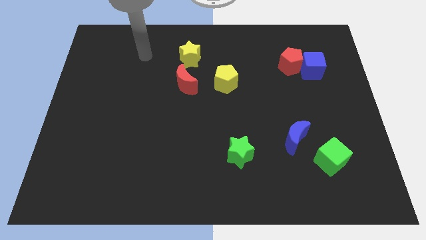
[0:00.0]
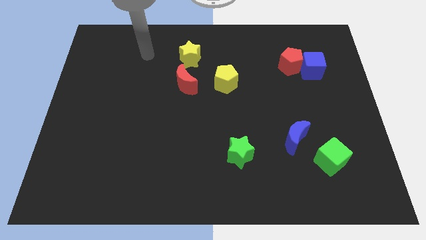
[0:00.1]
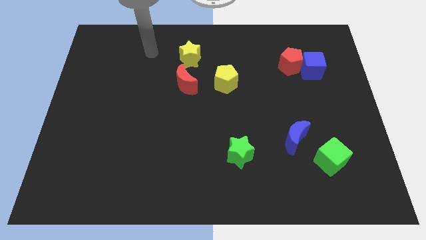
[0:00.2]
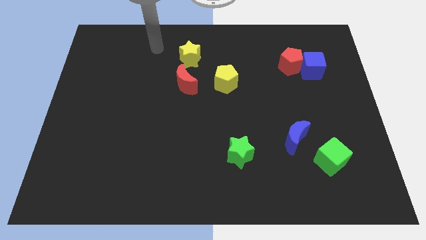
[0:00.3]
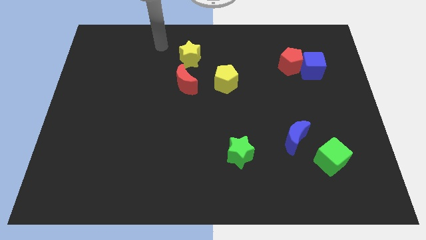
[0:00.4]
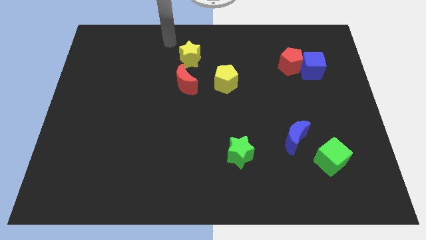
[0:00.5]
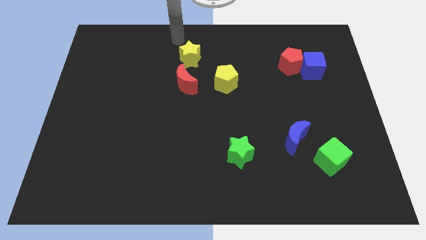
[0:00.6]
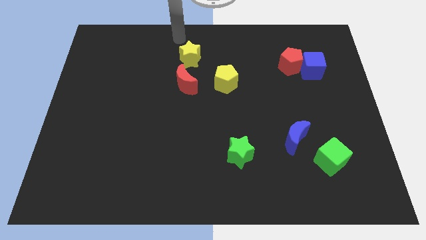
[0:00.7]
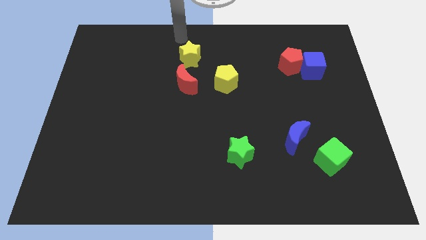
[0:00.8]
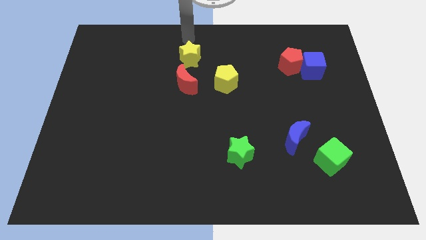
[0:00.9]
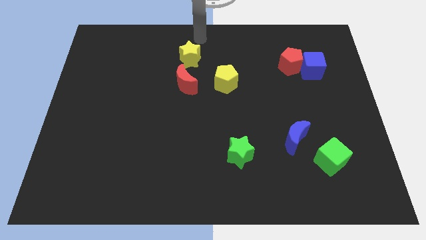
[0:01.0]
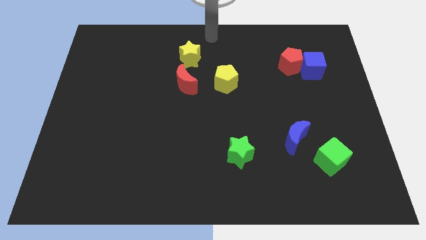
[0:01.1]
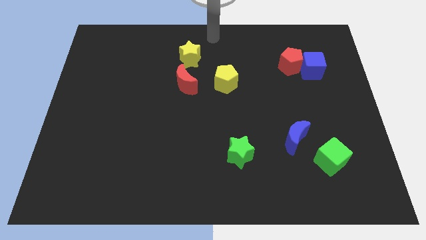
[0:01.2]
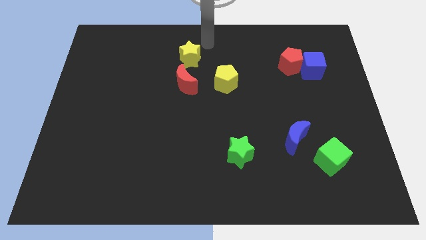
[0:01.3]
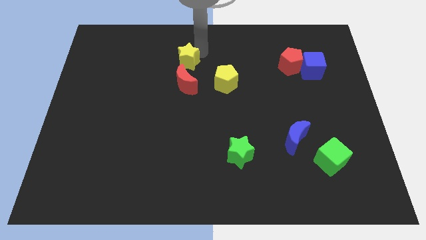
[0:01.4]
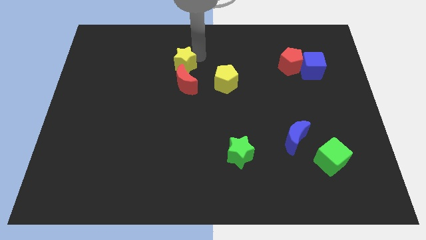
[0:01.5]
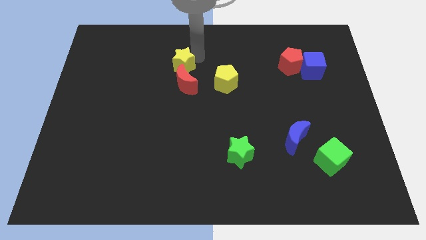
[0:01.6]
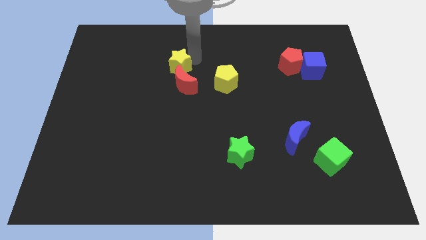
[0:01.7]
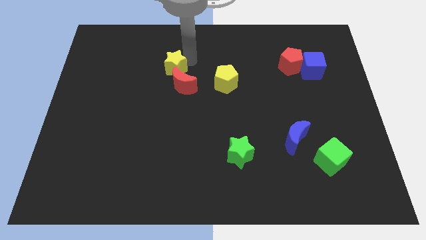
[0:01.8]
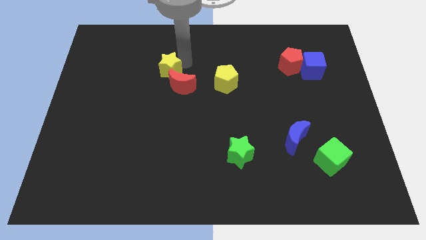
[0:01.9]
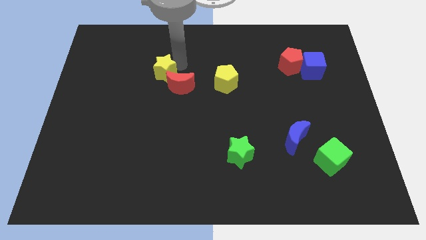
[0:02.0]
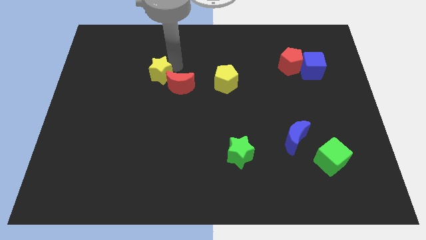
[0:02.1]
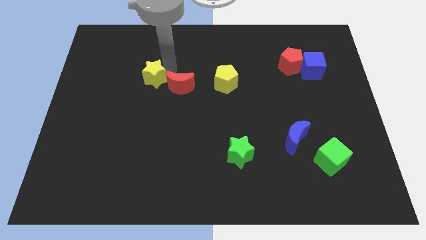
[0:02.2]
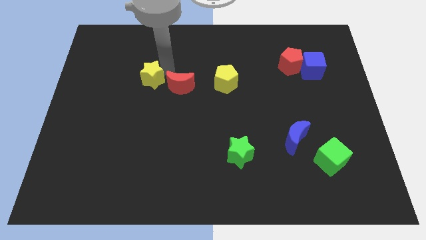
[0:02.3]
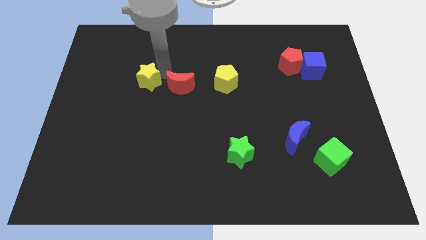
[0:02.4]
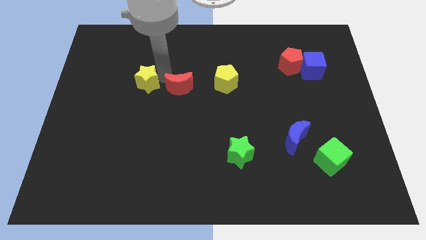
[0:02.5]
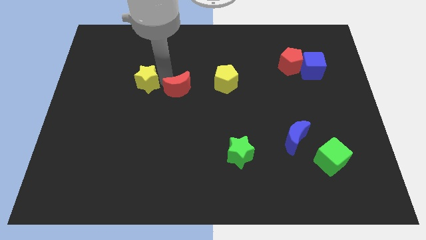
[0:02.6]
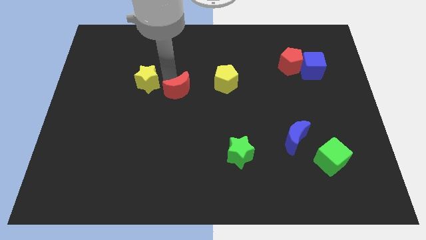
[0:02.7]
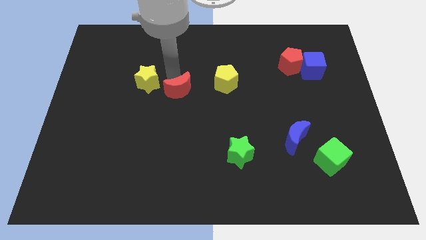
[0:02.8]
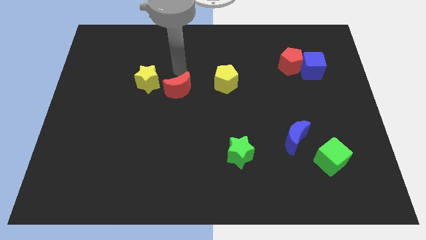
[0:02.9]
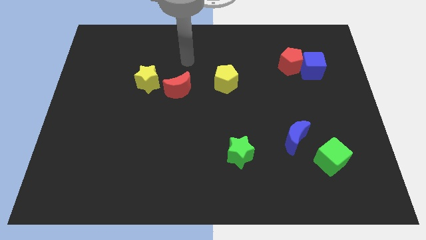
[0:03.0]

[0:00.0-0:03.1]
push the yellow star to the left of the red crescent

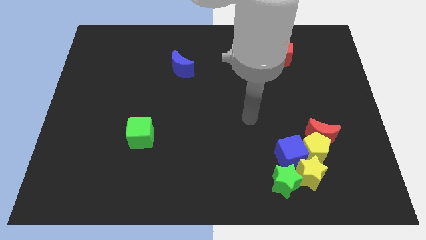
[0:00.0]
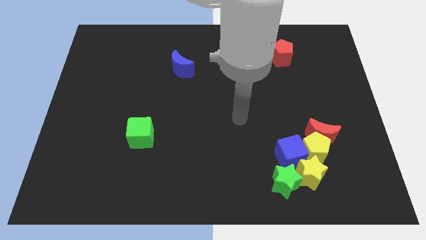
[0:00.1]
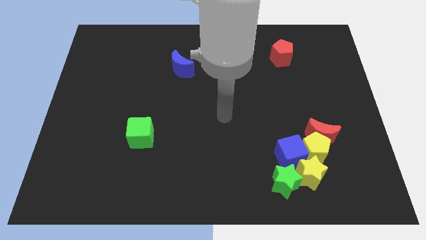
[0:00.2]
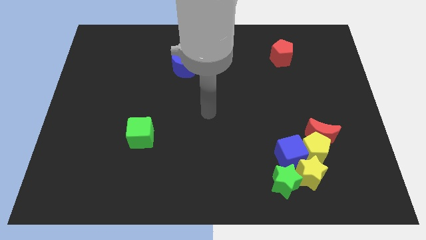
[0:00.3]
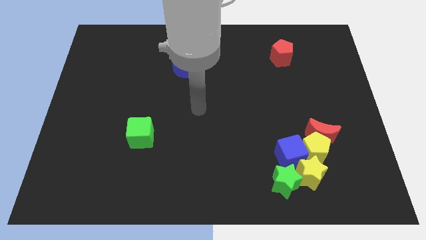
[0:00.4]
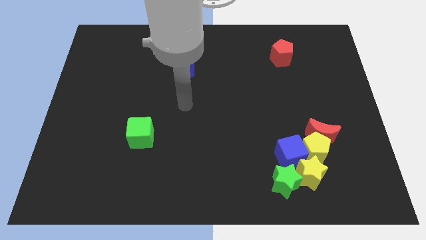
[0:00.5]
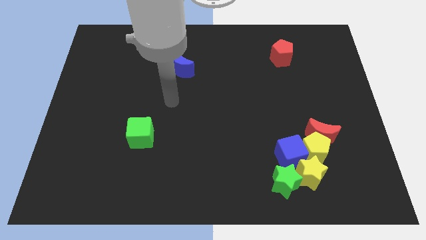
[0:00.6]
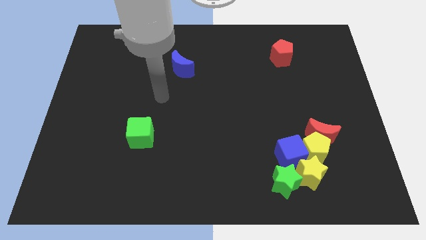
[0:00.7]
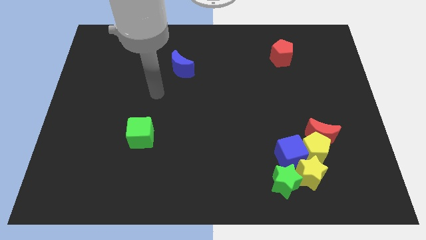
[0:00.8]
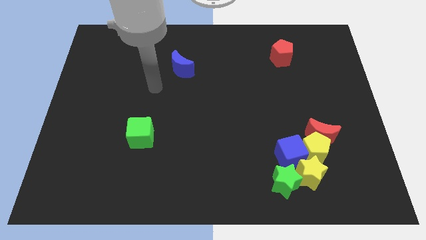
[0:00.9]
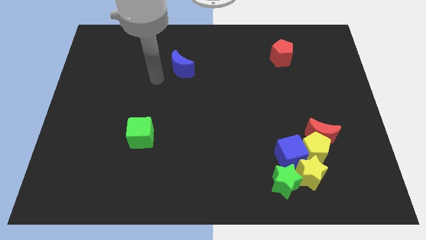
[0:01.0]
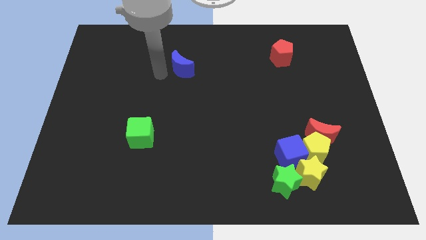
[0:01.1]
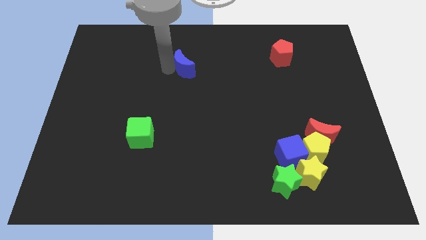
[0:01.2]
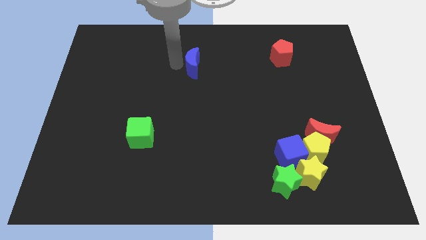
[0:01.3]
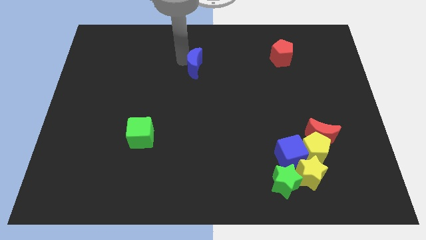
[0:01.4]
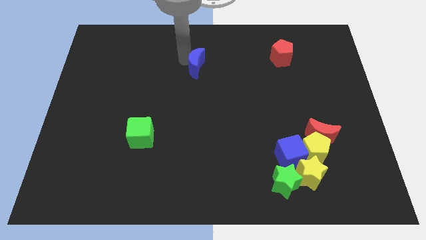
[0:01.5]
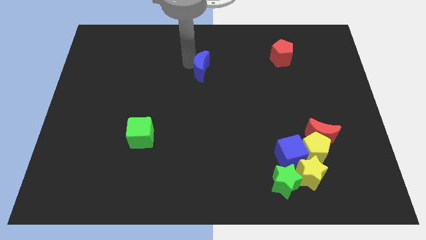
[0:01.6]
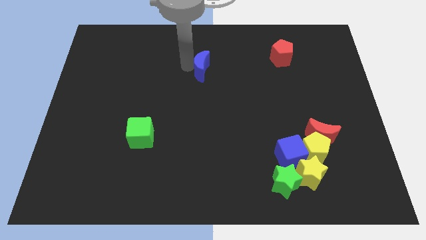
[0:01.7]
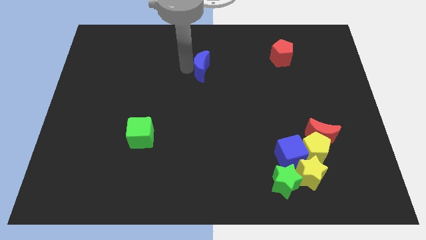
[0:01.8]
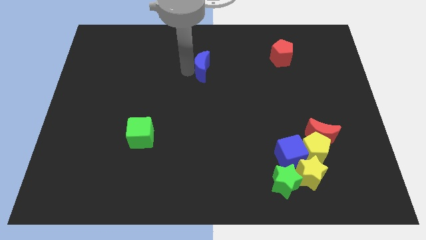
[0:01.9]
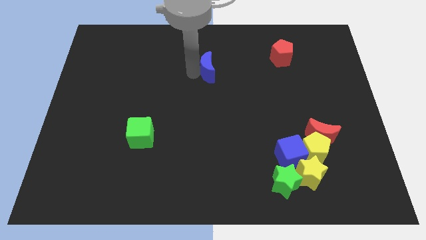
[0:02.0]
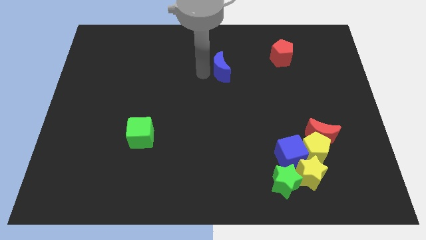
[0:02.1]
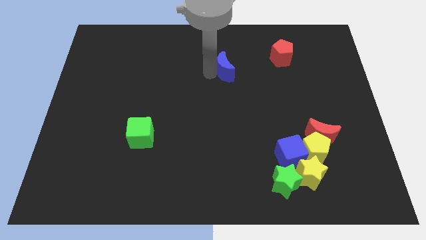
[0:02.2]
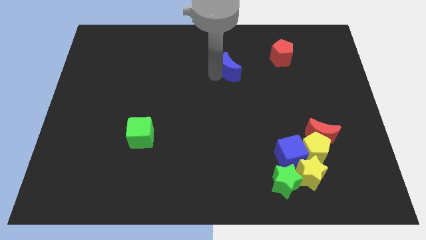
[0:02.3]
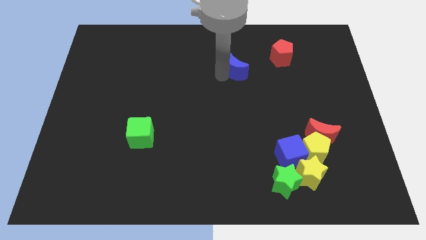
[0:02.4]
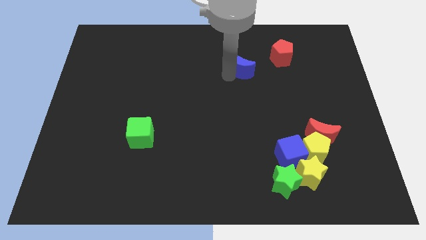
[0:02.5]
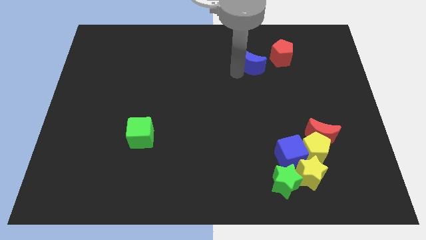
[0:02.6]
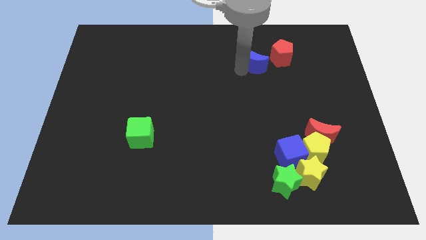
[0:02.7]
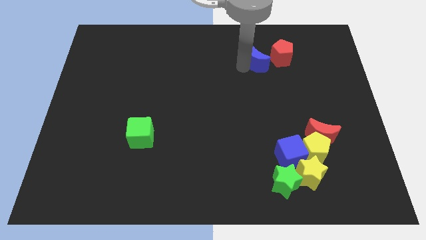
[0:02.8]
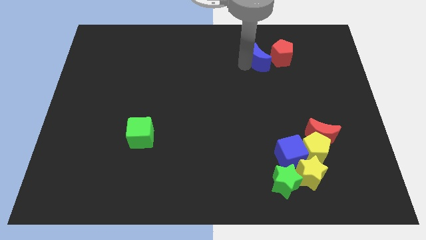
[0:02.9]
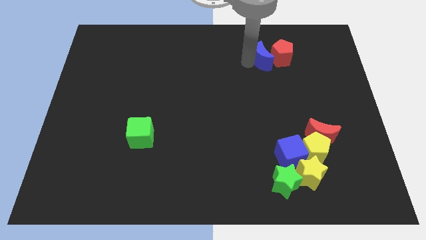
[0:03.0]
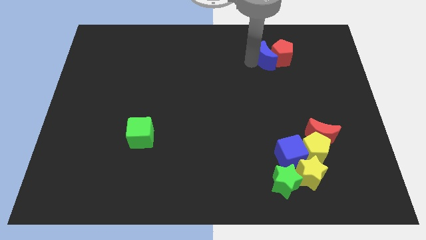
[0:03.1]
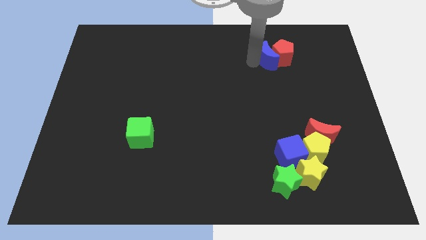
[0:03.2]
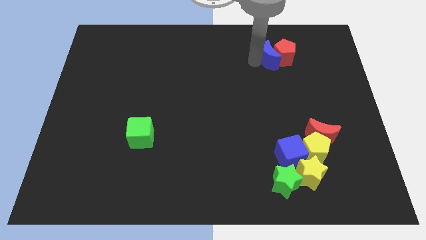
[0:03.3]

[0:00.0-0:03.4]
move the blue moon into red pentagon to the left

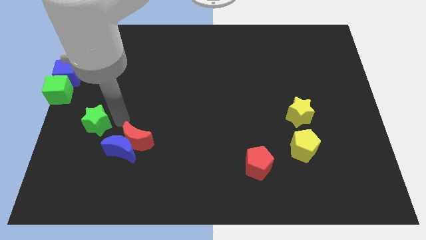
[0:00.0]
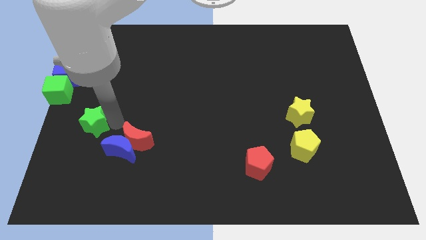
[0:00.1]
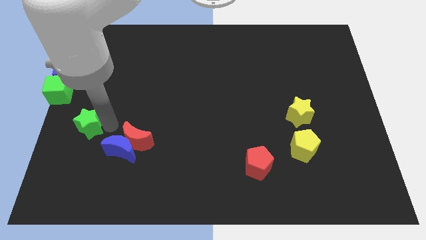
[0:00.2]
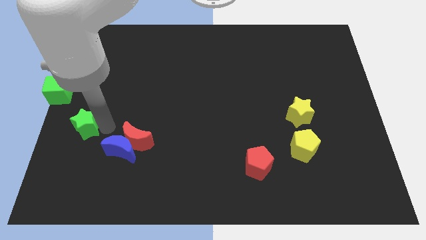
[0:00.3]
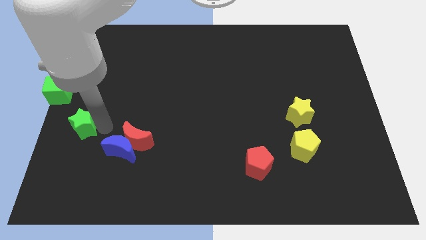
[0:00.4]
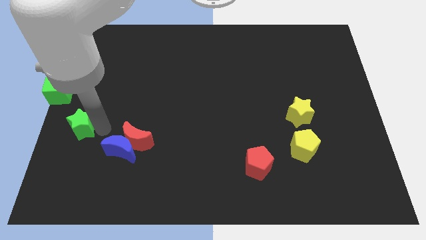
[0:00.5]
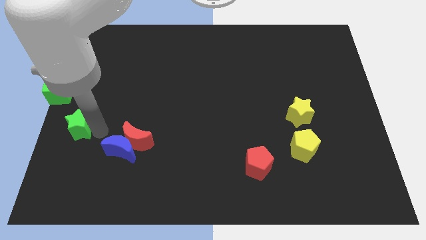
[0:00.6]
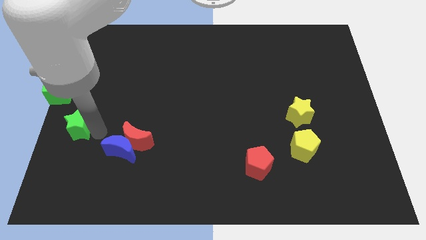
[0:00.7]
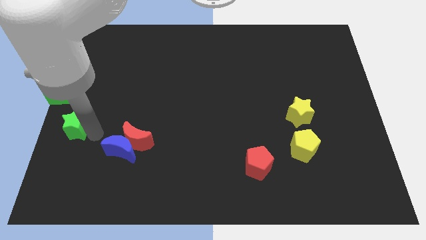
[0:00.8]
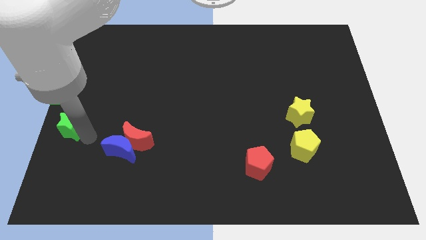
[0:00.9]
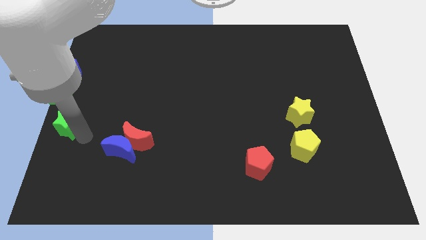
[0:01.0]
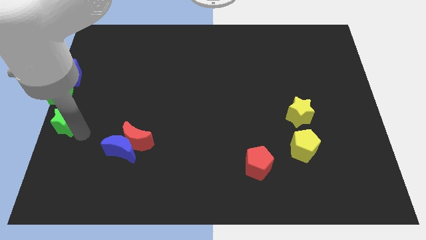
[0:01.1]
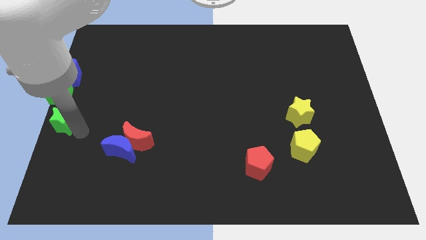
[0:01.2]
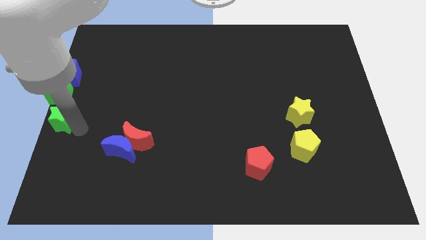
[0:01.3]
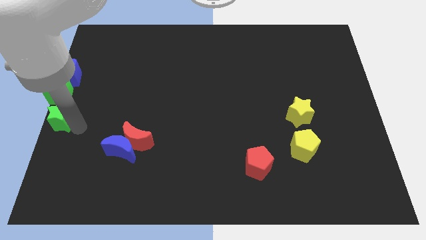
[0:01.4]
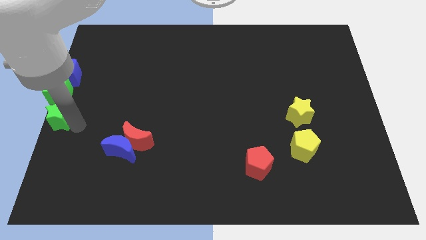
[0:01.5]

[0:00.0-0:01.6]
move the green star to the bottom of the green cube

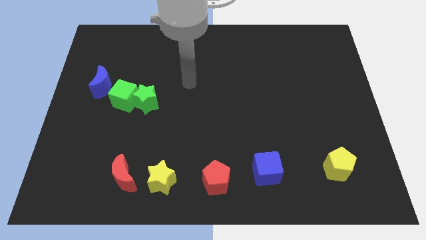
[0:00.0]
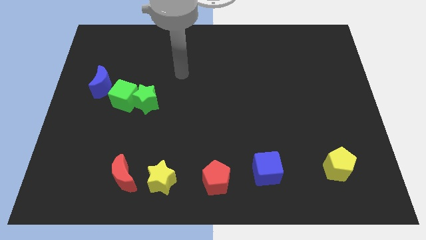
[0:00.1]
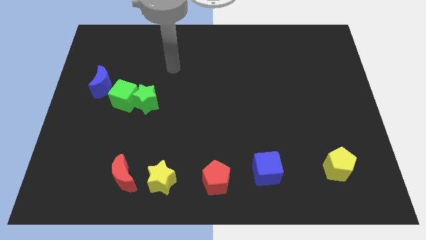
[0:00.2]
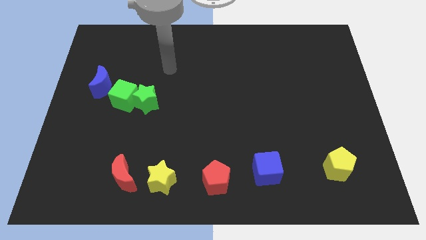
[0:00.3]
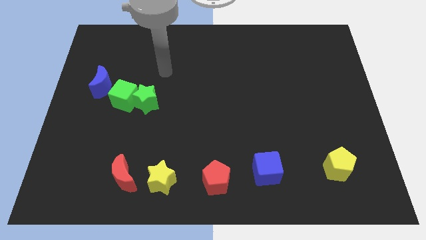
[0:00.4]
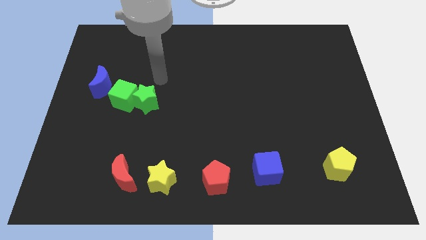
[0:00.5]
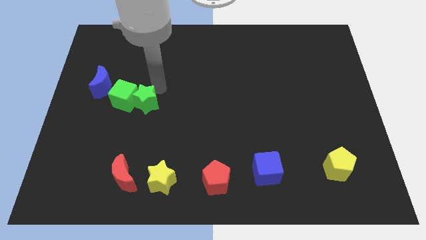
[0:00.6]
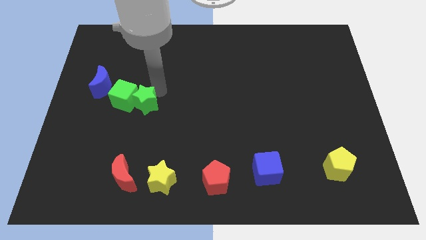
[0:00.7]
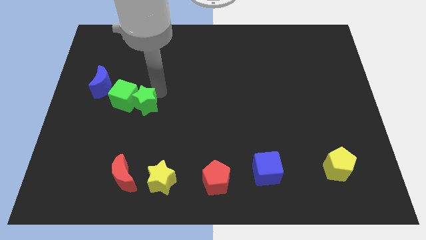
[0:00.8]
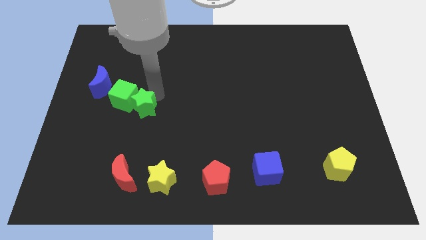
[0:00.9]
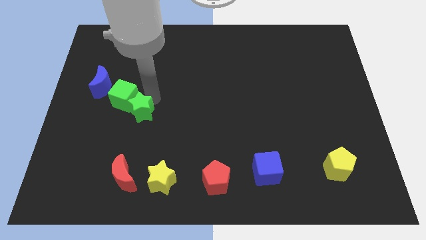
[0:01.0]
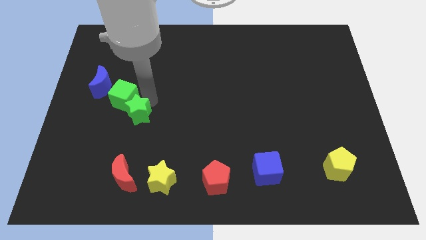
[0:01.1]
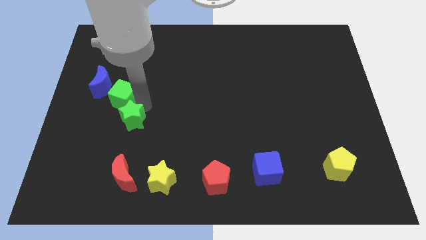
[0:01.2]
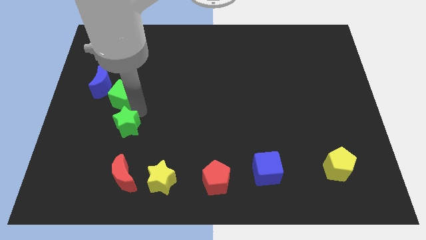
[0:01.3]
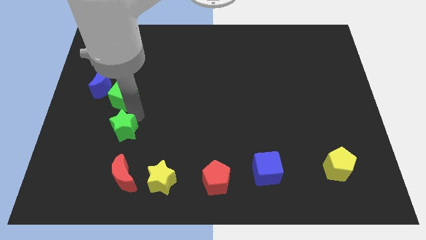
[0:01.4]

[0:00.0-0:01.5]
slightly push the green star above the red moon
